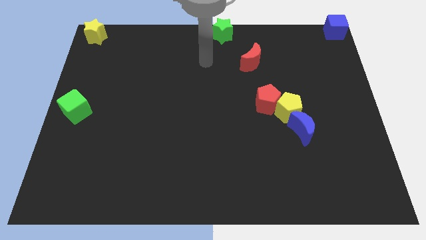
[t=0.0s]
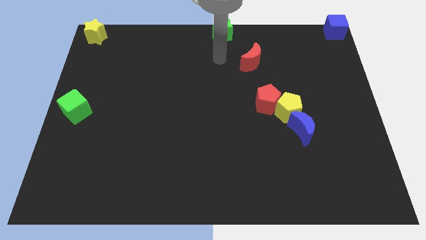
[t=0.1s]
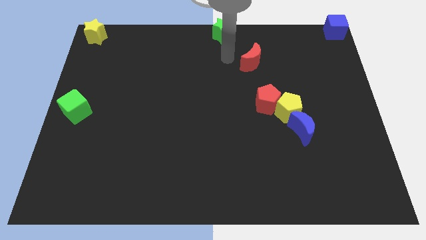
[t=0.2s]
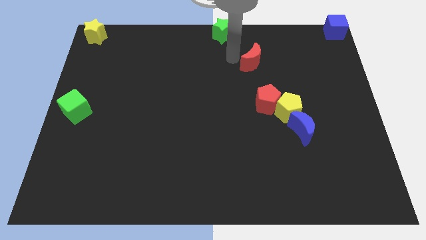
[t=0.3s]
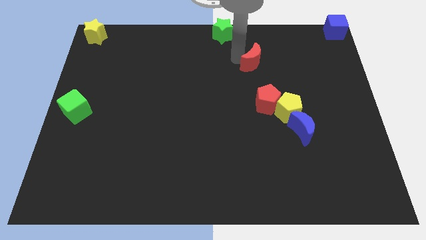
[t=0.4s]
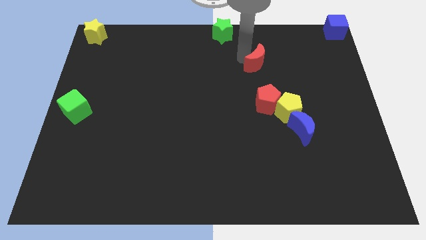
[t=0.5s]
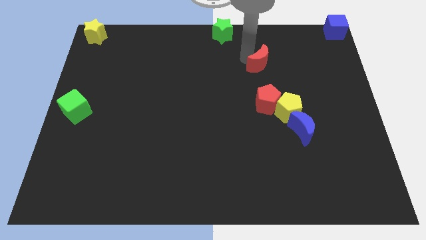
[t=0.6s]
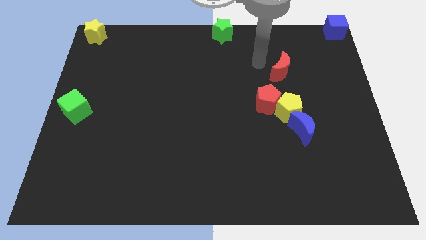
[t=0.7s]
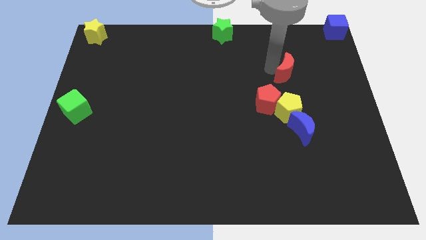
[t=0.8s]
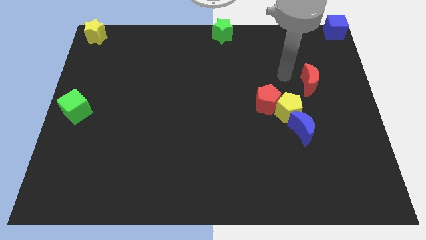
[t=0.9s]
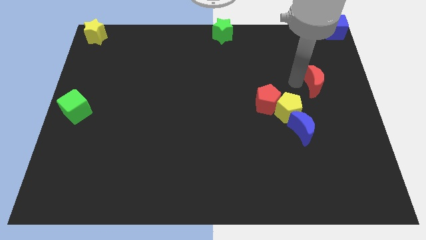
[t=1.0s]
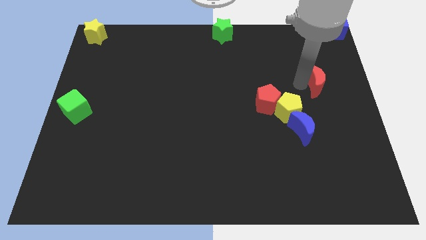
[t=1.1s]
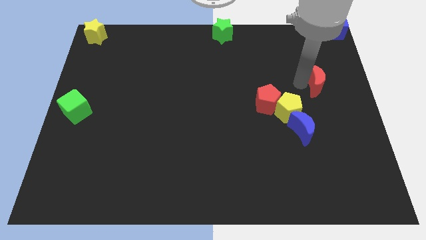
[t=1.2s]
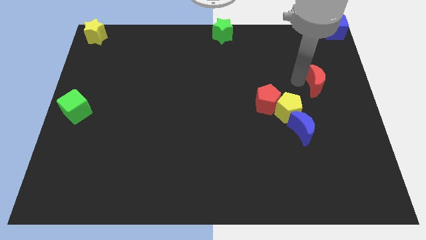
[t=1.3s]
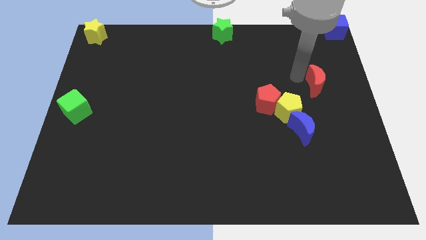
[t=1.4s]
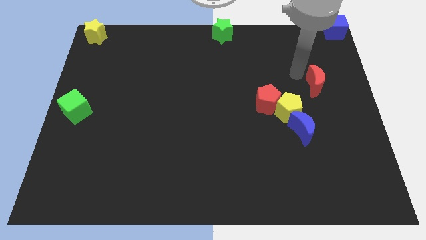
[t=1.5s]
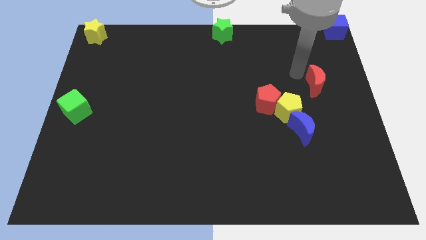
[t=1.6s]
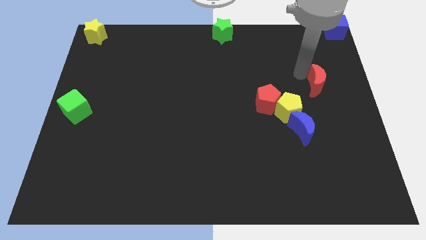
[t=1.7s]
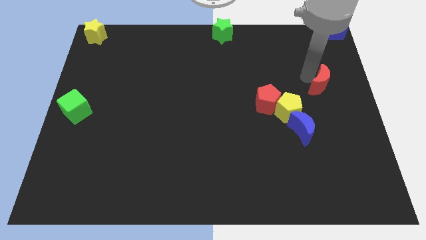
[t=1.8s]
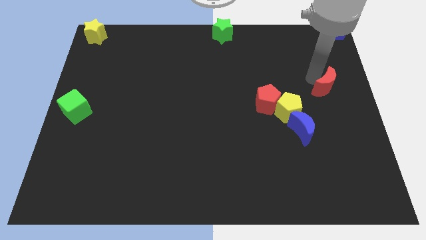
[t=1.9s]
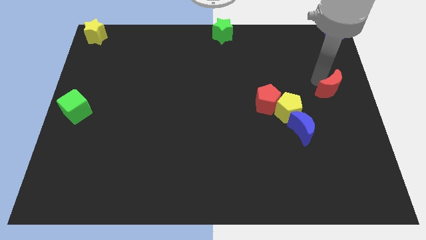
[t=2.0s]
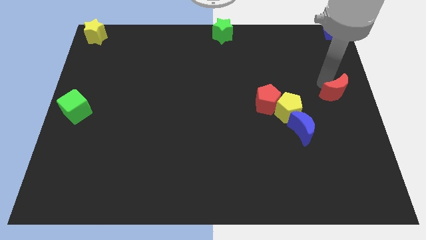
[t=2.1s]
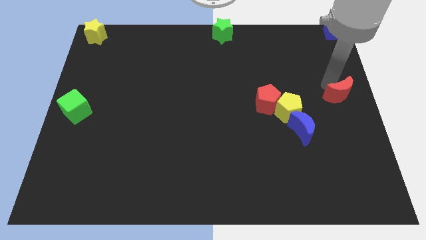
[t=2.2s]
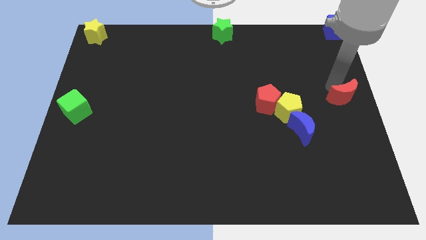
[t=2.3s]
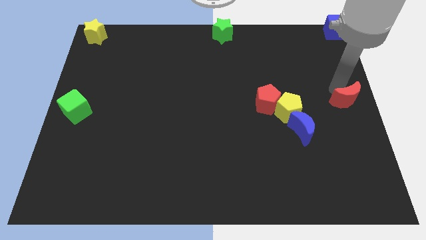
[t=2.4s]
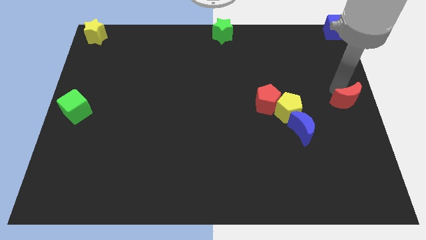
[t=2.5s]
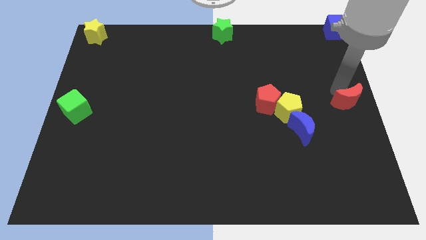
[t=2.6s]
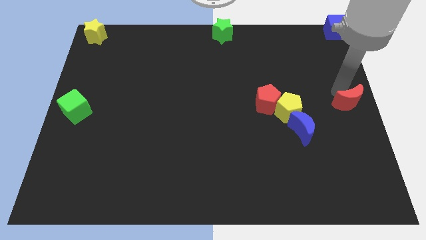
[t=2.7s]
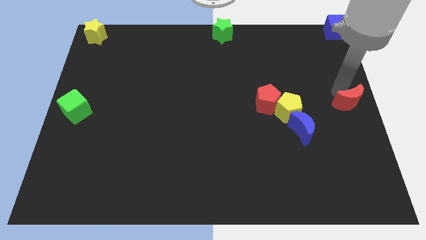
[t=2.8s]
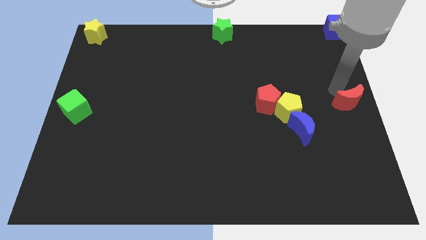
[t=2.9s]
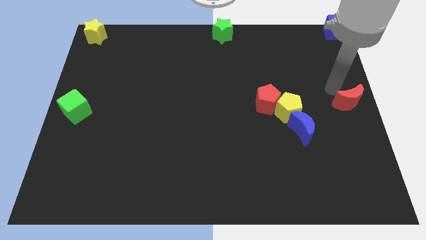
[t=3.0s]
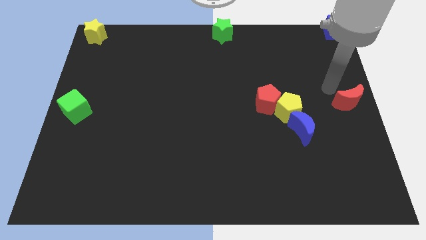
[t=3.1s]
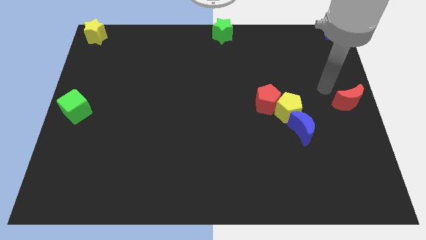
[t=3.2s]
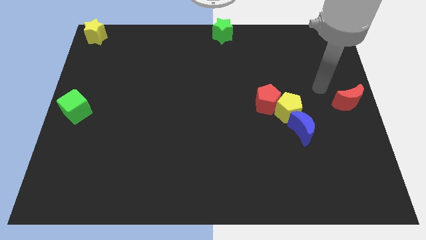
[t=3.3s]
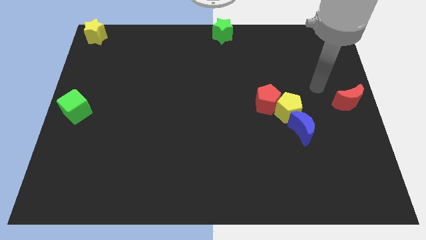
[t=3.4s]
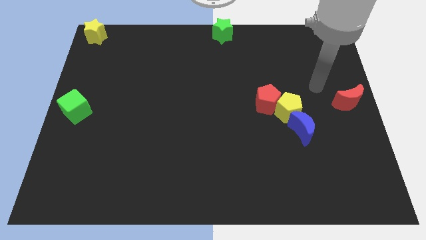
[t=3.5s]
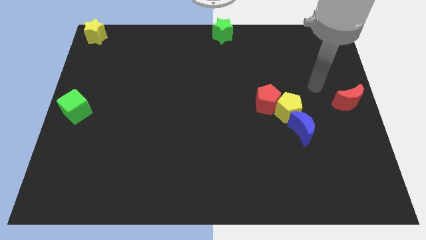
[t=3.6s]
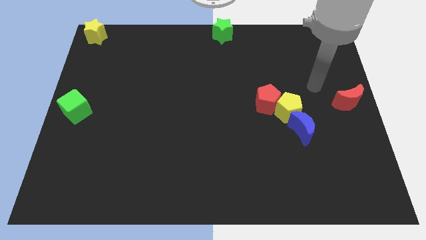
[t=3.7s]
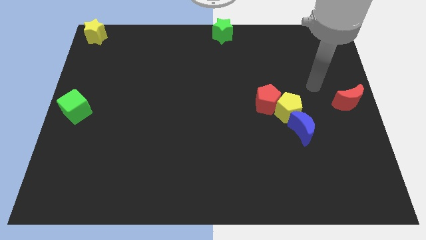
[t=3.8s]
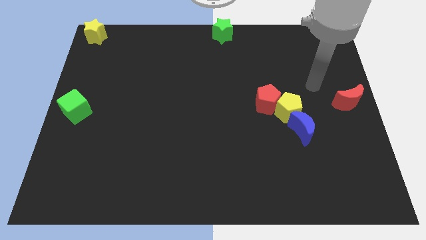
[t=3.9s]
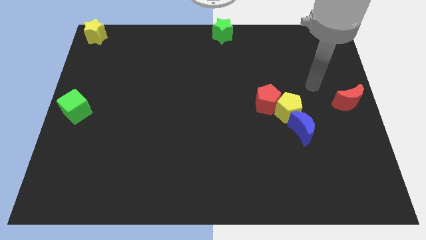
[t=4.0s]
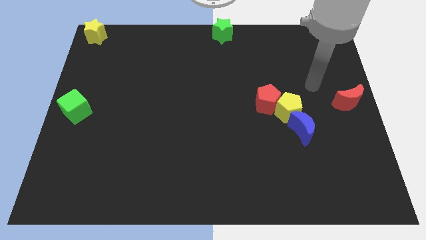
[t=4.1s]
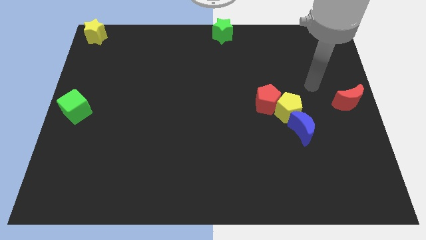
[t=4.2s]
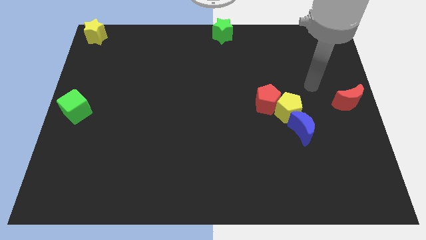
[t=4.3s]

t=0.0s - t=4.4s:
place the red moon to the right of the yellow pentagon

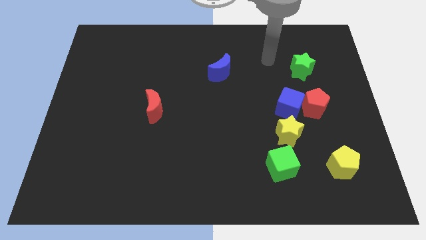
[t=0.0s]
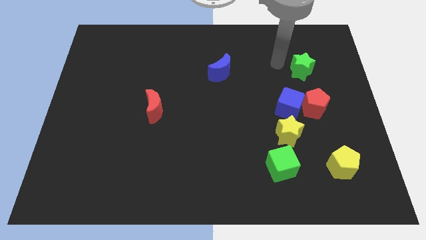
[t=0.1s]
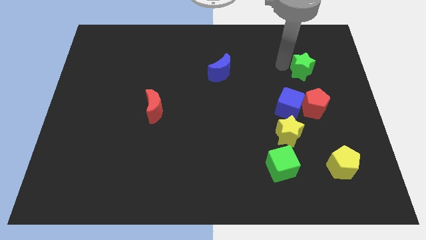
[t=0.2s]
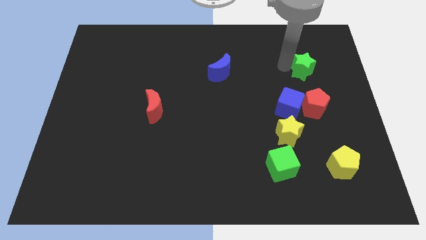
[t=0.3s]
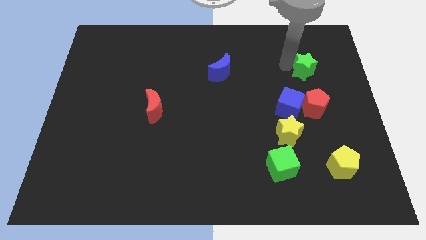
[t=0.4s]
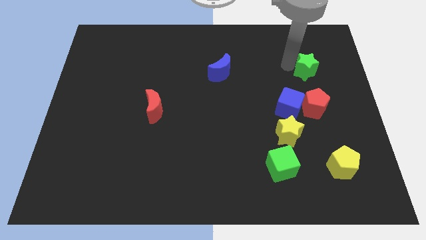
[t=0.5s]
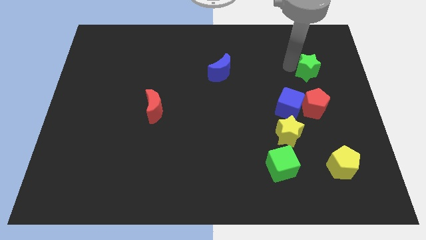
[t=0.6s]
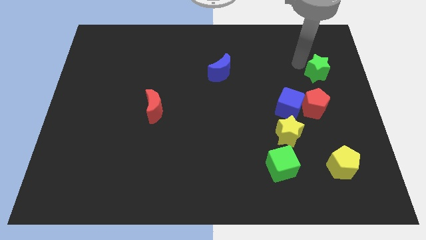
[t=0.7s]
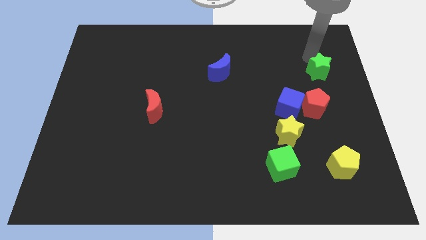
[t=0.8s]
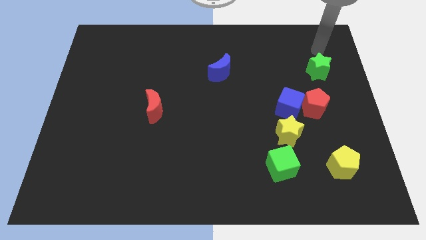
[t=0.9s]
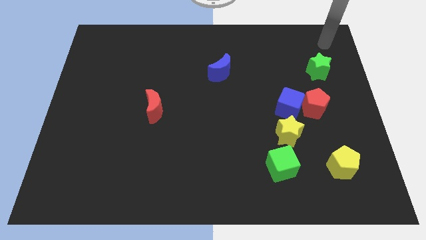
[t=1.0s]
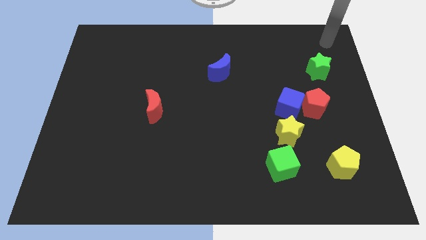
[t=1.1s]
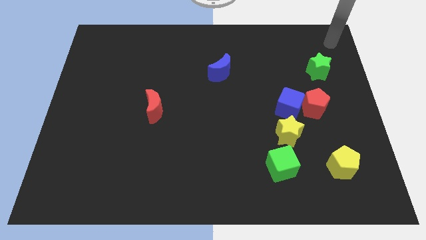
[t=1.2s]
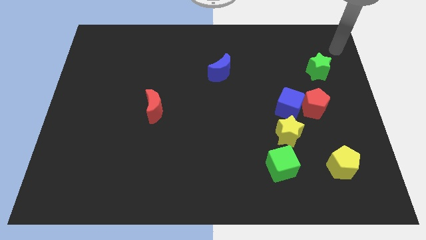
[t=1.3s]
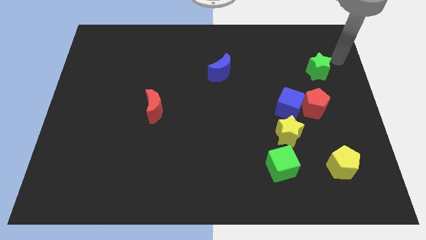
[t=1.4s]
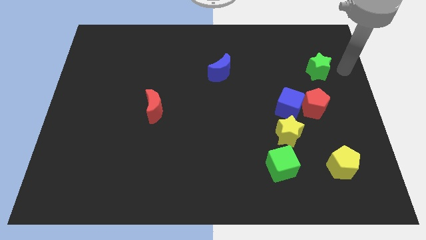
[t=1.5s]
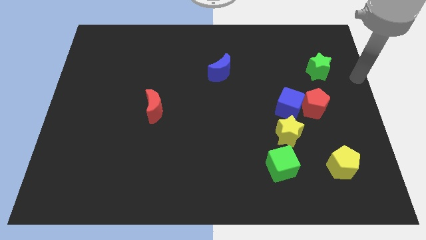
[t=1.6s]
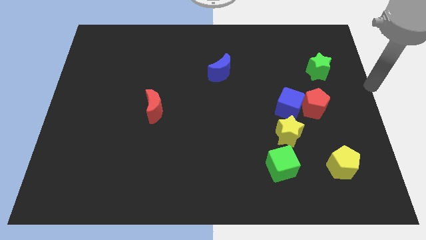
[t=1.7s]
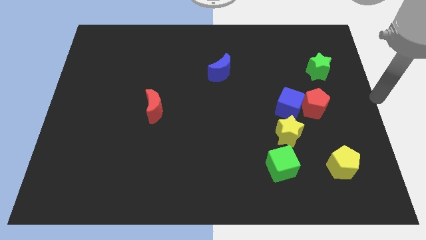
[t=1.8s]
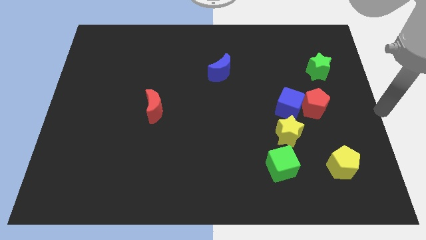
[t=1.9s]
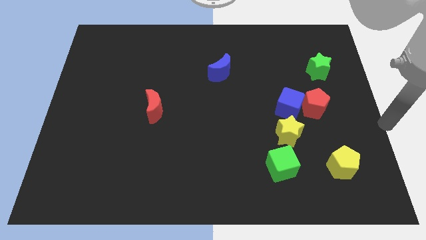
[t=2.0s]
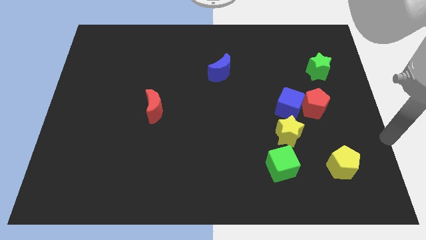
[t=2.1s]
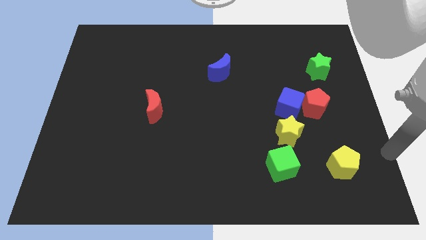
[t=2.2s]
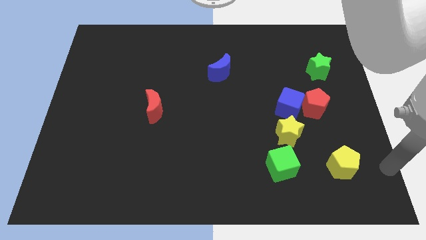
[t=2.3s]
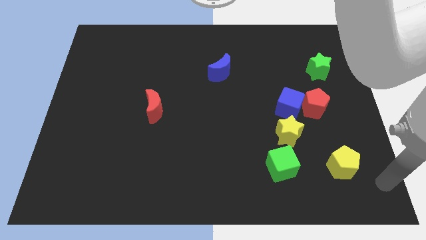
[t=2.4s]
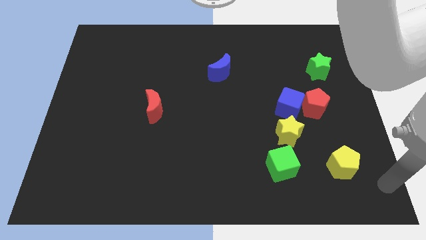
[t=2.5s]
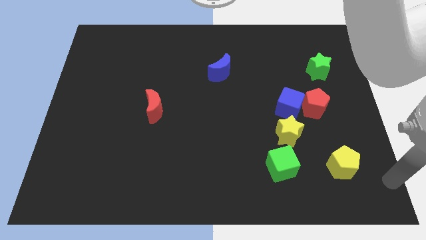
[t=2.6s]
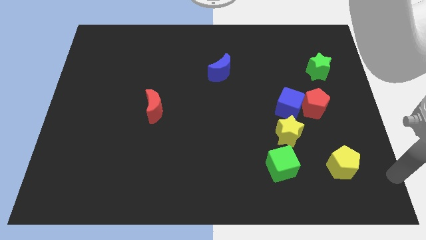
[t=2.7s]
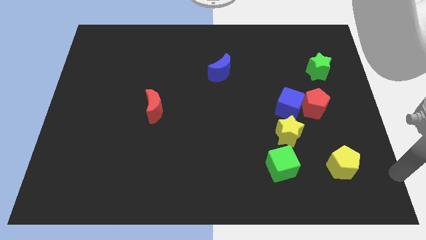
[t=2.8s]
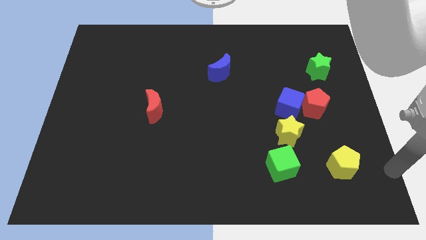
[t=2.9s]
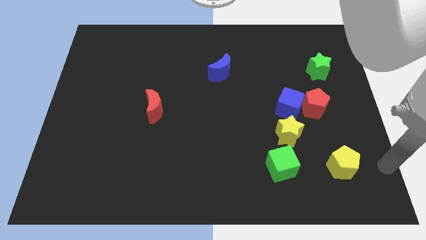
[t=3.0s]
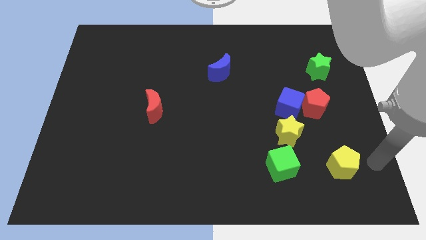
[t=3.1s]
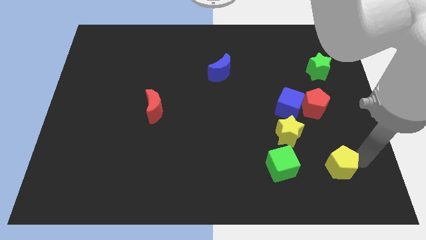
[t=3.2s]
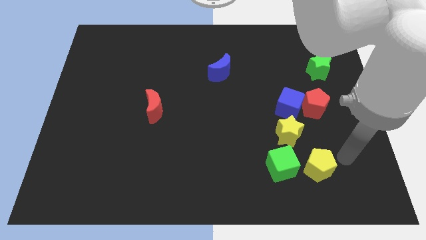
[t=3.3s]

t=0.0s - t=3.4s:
move your arm right to the yellow pentagon

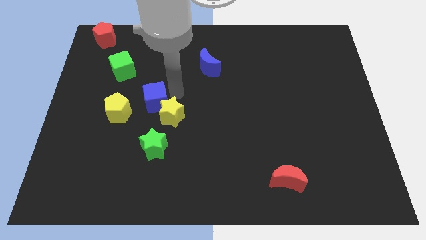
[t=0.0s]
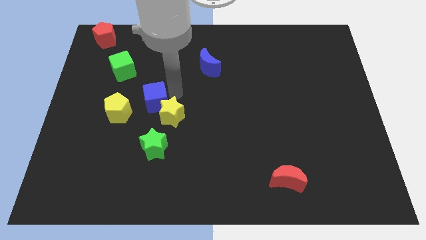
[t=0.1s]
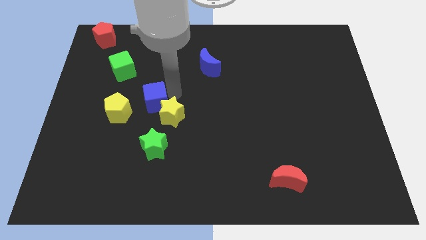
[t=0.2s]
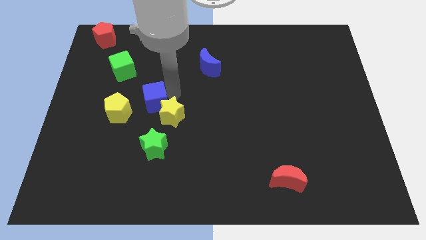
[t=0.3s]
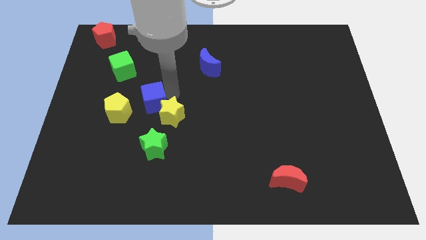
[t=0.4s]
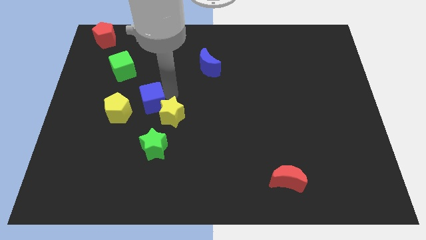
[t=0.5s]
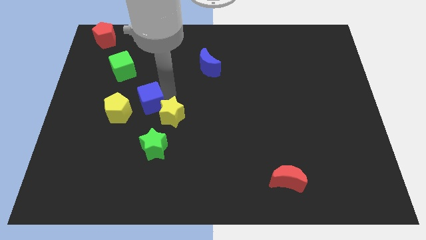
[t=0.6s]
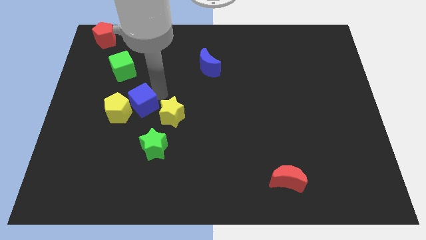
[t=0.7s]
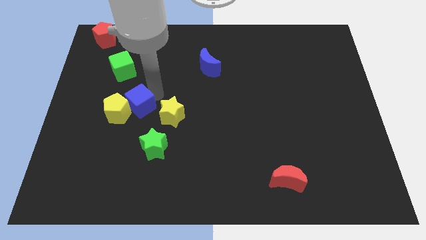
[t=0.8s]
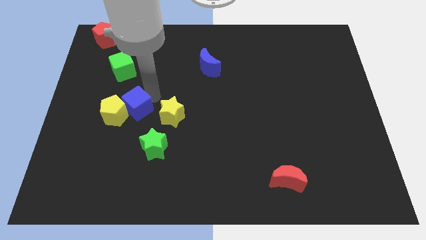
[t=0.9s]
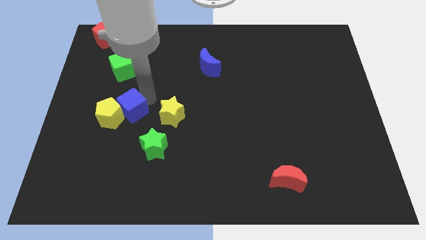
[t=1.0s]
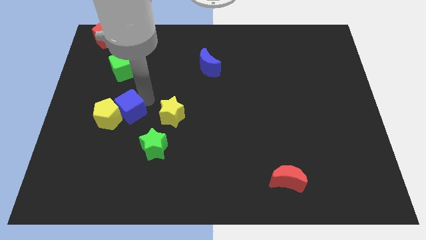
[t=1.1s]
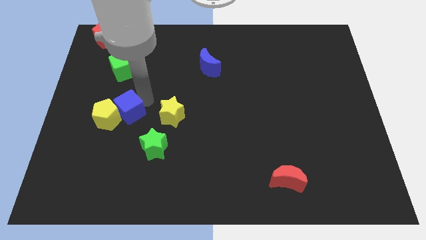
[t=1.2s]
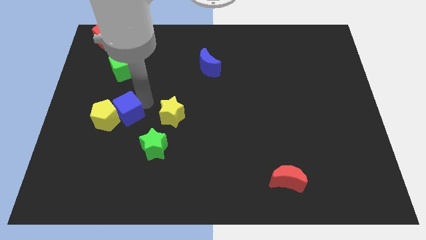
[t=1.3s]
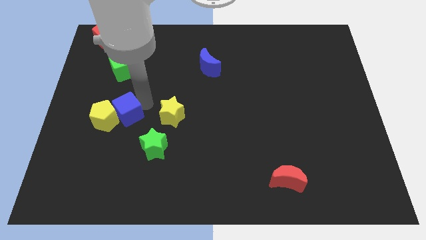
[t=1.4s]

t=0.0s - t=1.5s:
drag the blue cube into the yellow pentagon
